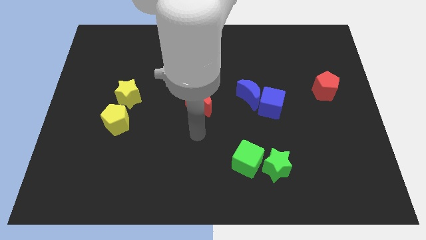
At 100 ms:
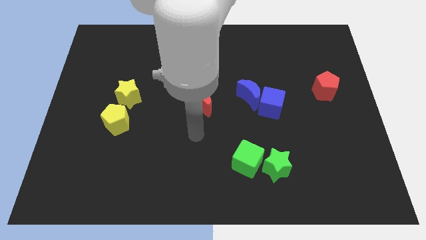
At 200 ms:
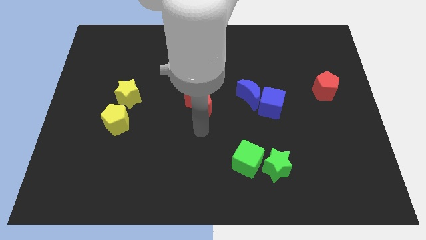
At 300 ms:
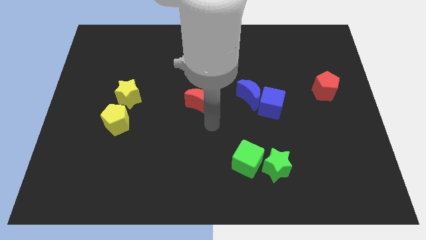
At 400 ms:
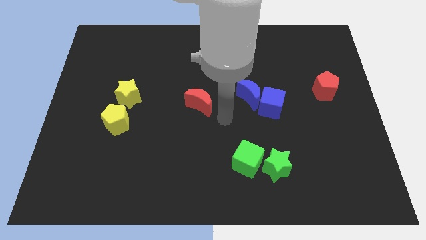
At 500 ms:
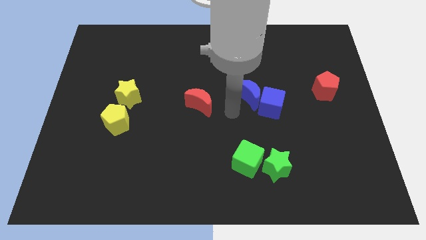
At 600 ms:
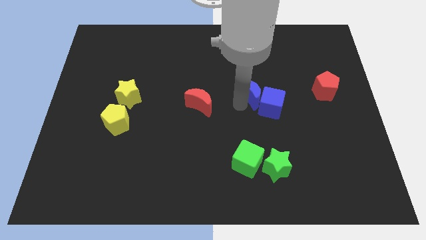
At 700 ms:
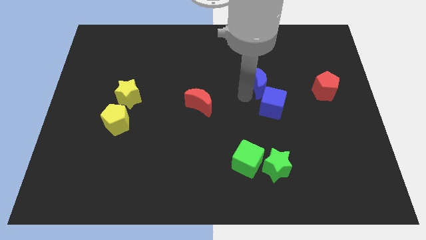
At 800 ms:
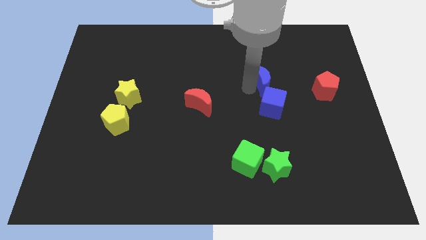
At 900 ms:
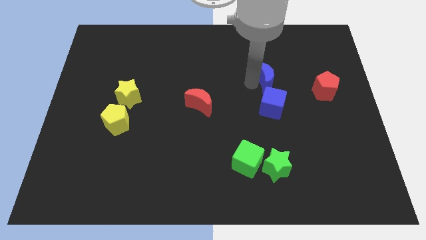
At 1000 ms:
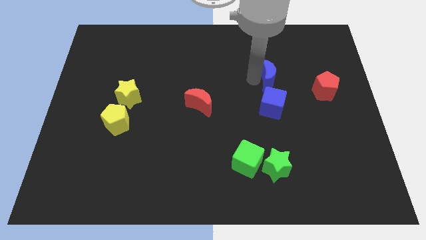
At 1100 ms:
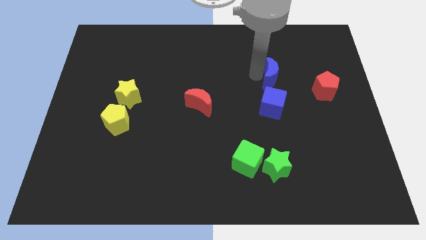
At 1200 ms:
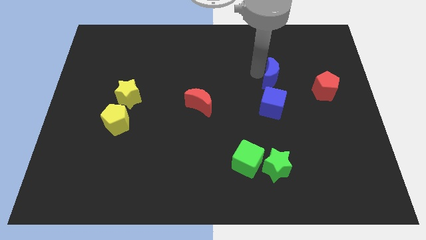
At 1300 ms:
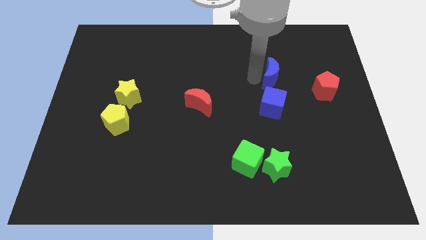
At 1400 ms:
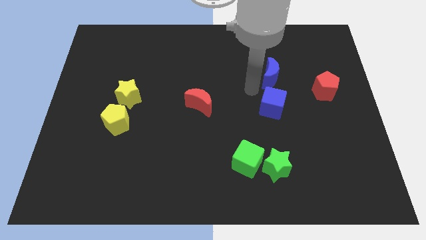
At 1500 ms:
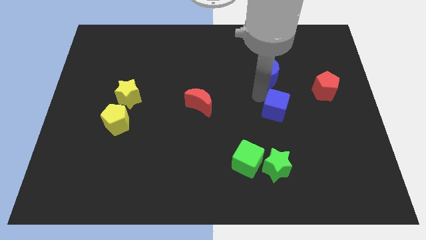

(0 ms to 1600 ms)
place the blue crescent above the blue cube

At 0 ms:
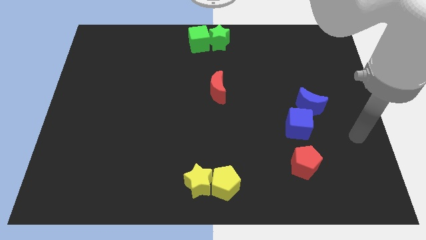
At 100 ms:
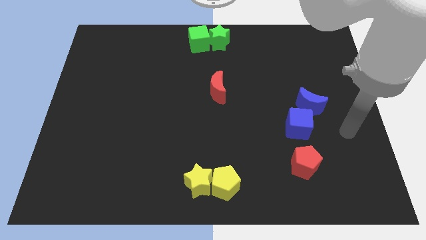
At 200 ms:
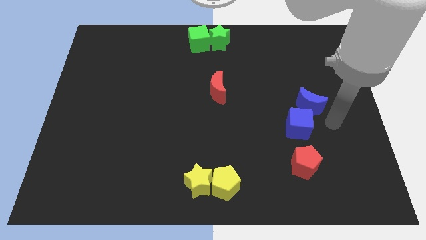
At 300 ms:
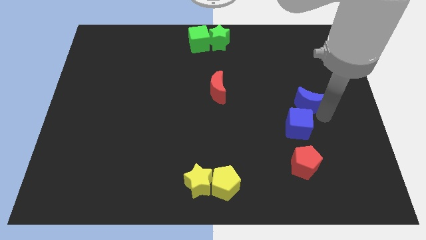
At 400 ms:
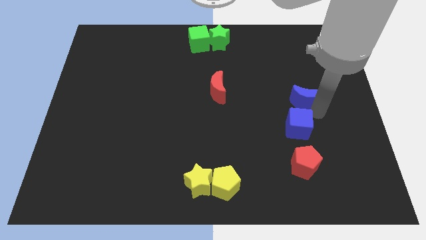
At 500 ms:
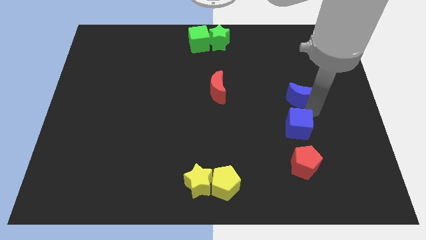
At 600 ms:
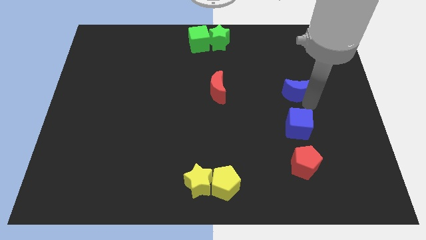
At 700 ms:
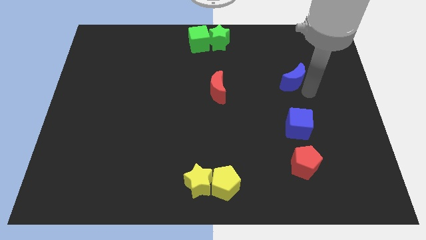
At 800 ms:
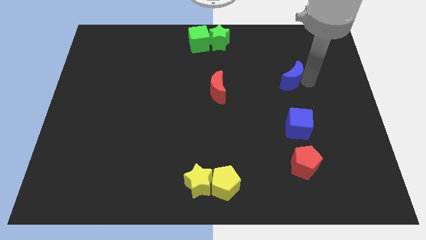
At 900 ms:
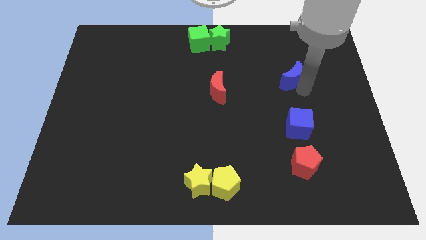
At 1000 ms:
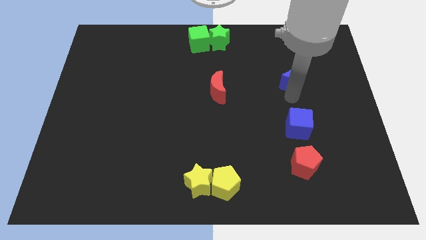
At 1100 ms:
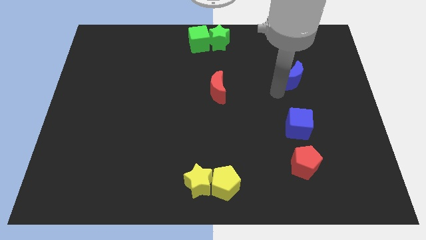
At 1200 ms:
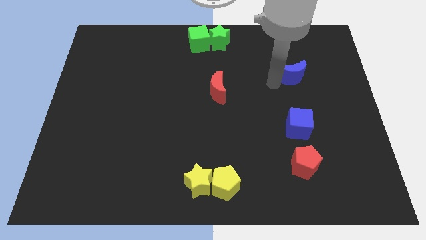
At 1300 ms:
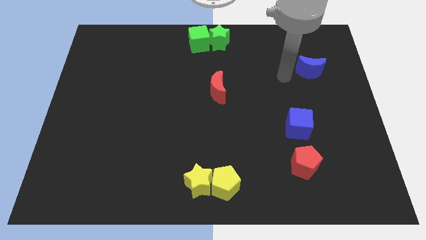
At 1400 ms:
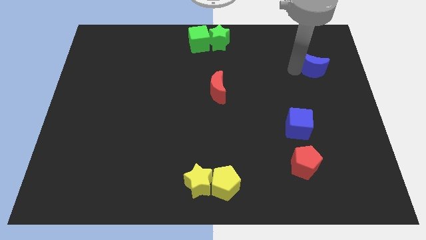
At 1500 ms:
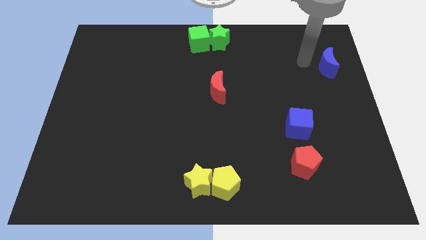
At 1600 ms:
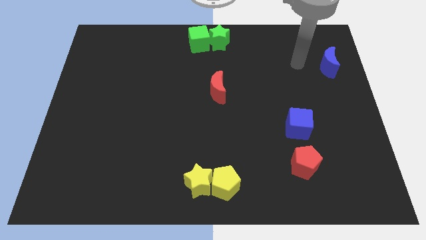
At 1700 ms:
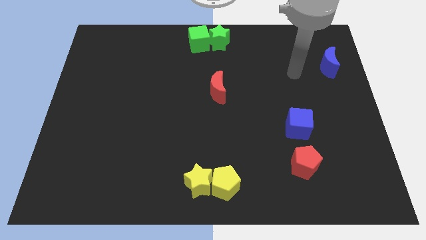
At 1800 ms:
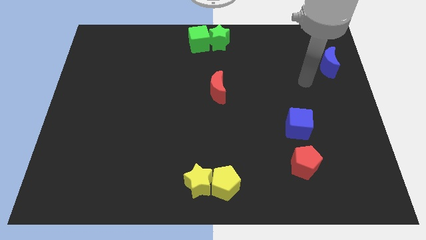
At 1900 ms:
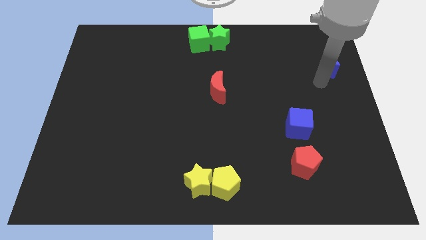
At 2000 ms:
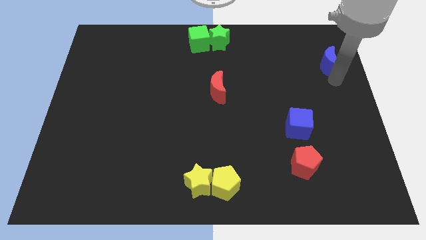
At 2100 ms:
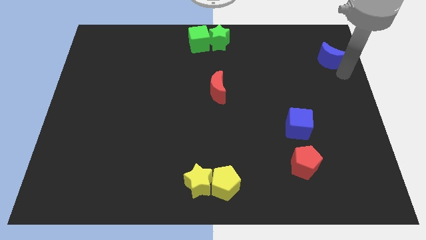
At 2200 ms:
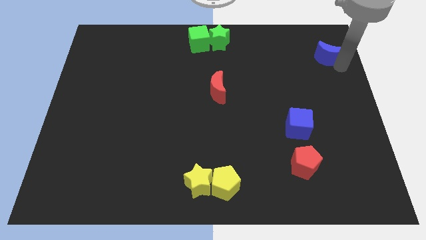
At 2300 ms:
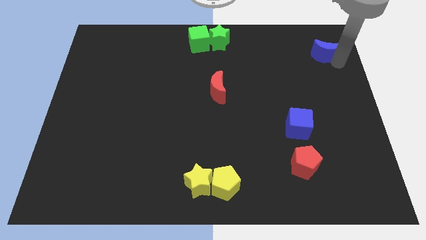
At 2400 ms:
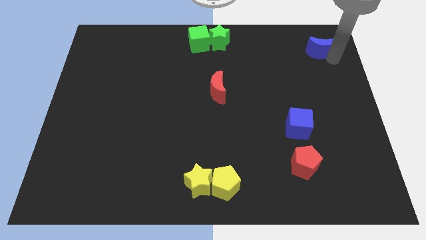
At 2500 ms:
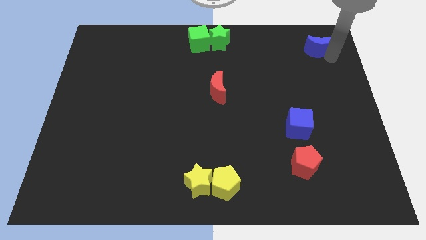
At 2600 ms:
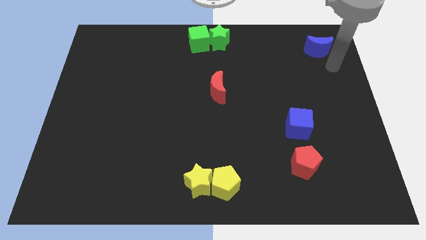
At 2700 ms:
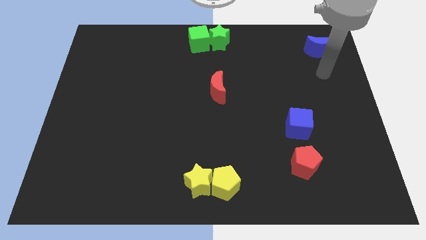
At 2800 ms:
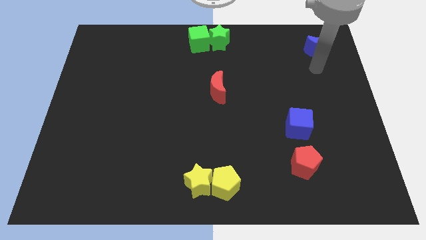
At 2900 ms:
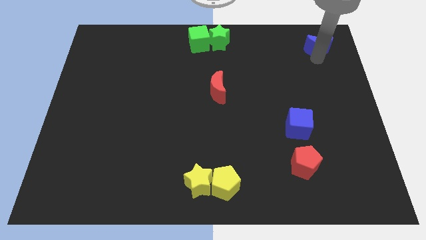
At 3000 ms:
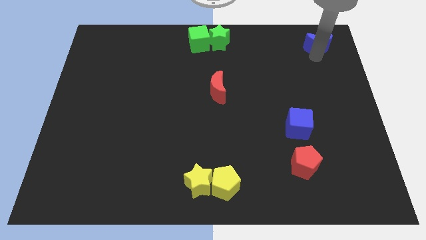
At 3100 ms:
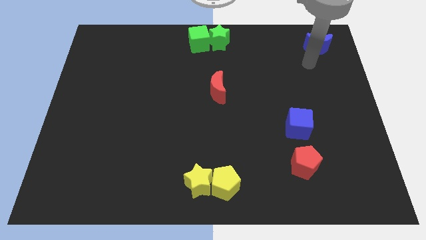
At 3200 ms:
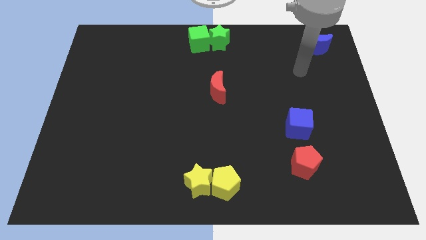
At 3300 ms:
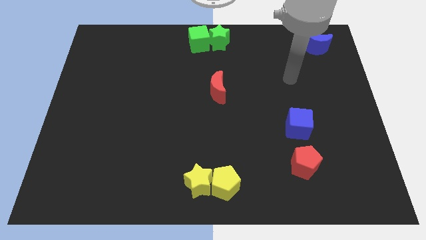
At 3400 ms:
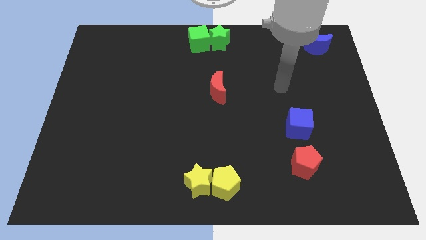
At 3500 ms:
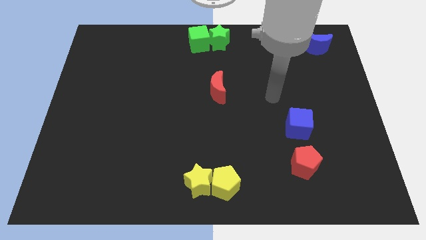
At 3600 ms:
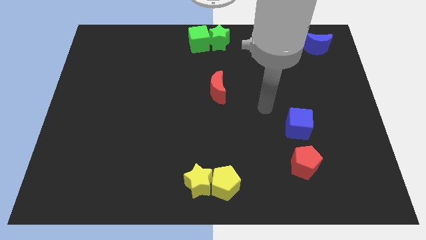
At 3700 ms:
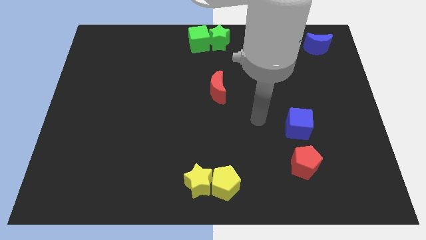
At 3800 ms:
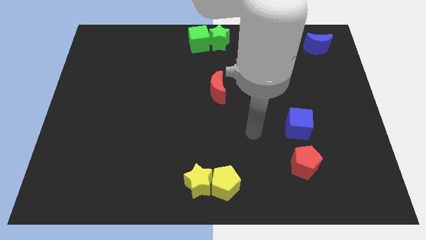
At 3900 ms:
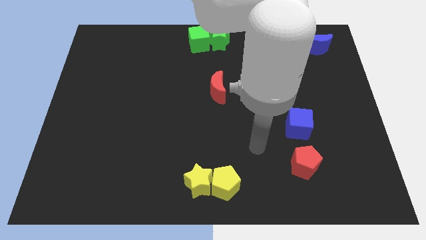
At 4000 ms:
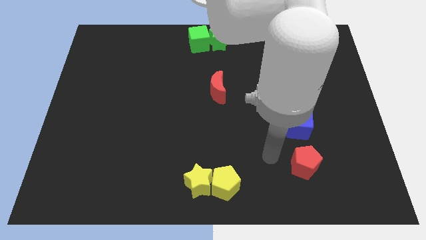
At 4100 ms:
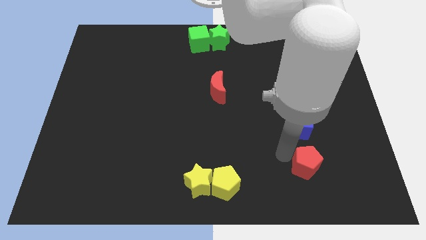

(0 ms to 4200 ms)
push the blue crescent towards the top right side of the board

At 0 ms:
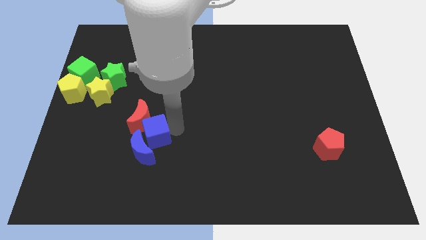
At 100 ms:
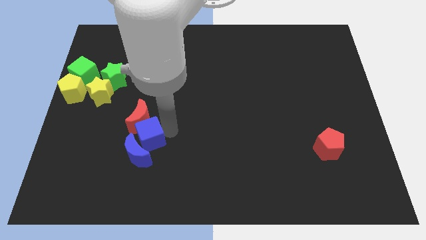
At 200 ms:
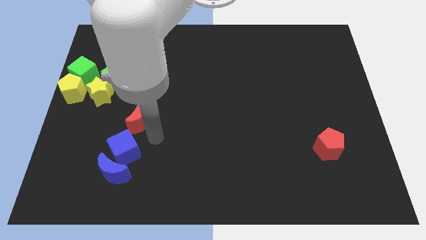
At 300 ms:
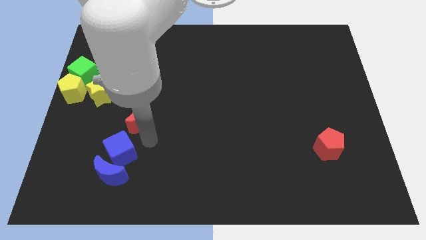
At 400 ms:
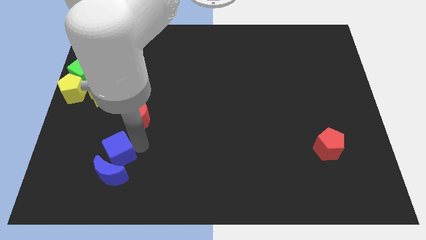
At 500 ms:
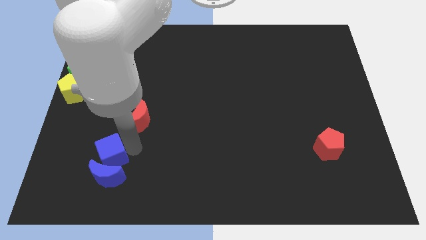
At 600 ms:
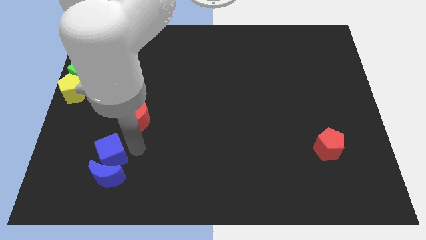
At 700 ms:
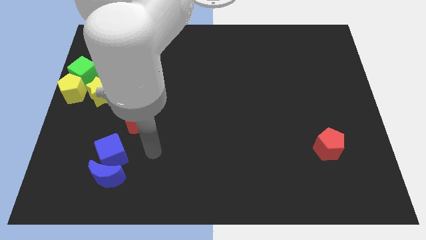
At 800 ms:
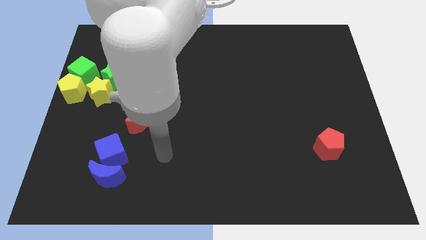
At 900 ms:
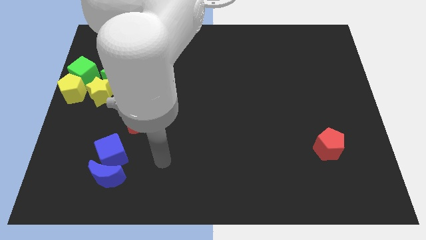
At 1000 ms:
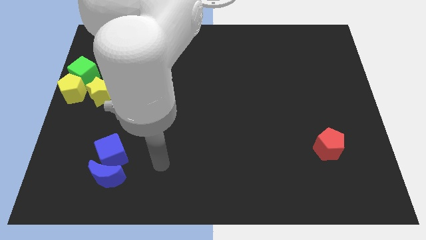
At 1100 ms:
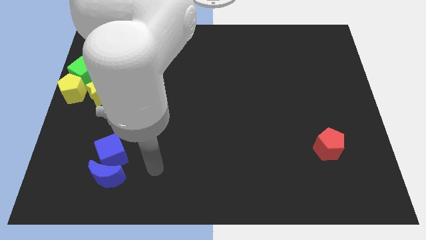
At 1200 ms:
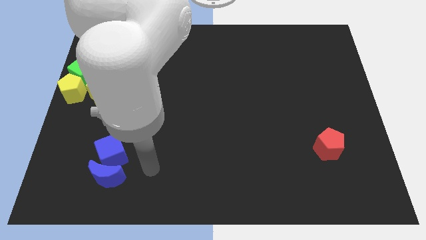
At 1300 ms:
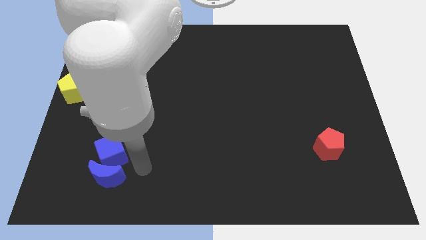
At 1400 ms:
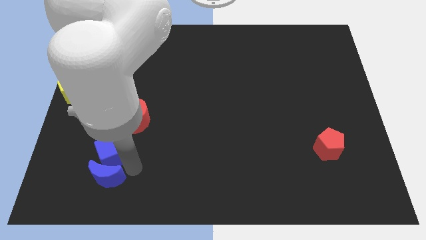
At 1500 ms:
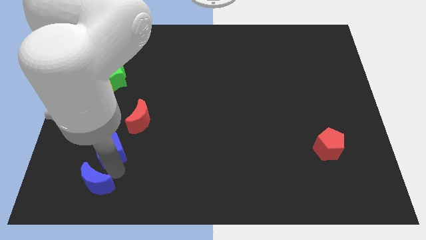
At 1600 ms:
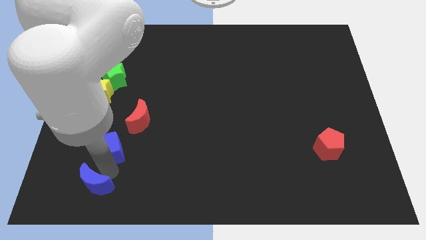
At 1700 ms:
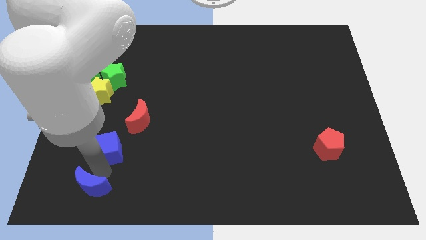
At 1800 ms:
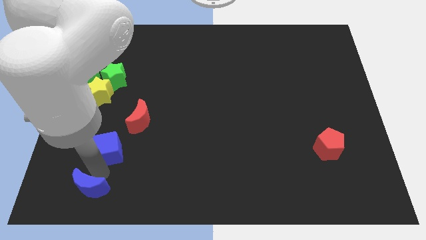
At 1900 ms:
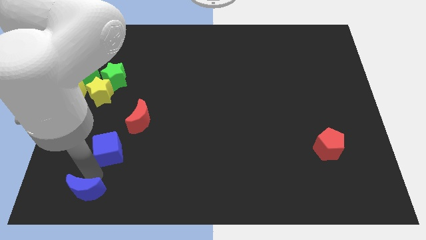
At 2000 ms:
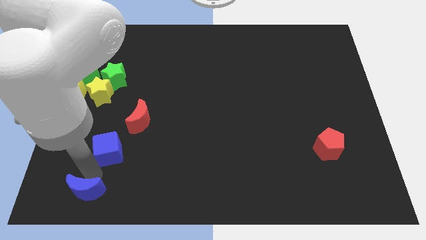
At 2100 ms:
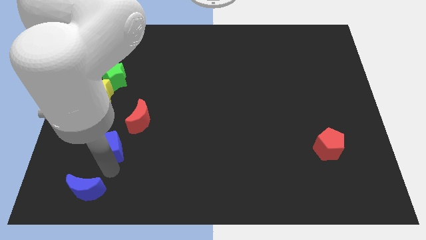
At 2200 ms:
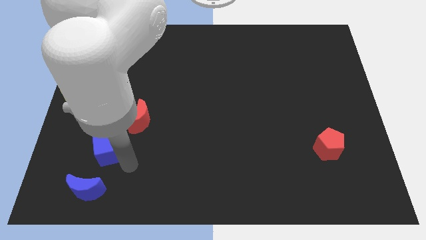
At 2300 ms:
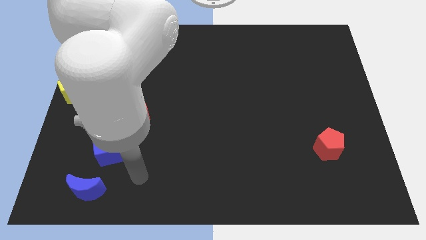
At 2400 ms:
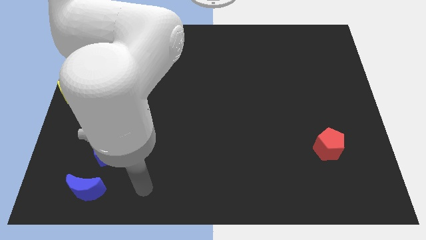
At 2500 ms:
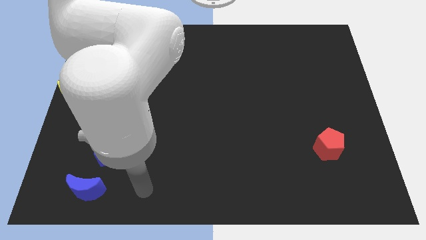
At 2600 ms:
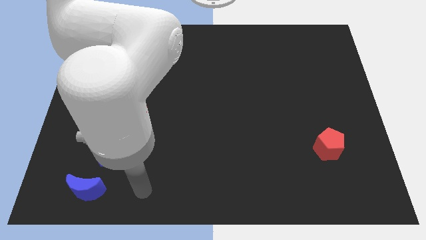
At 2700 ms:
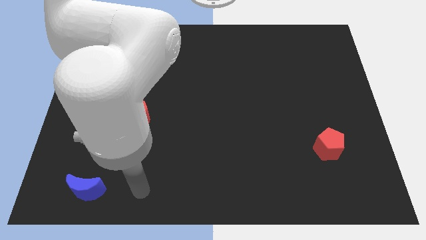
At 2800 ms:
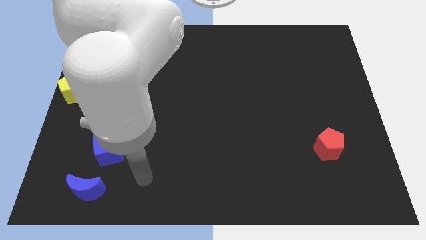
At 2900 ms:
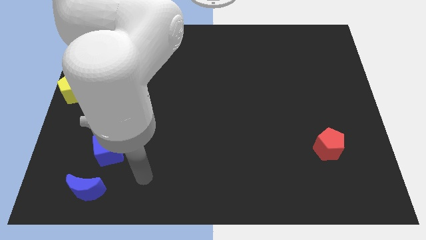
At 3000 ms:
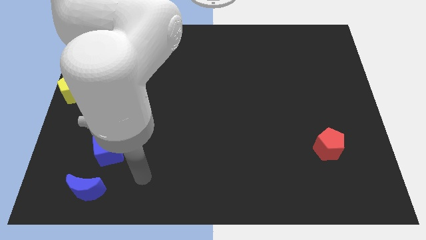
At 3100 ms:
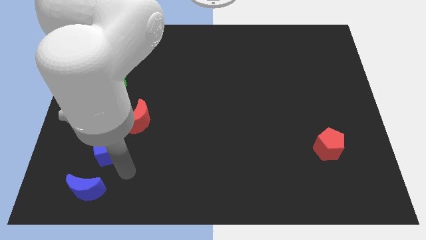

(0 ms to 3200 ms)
move the blue blocks together and separate at the bottom left
